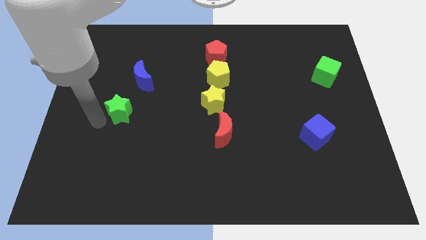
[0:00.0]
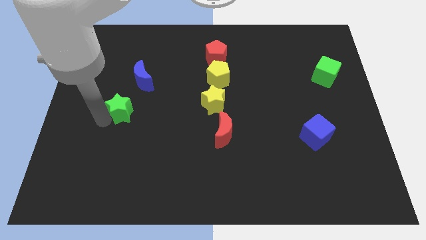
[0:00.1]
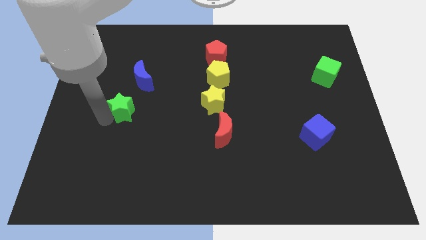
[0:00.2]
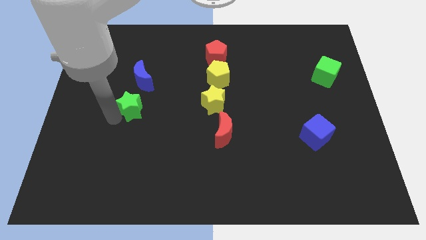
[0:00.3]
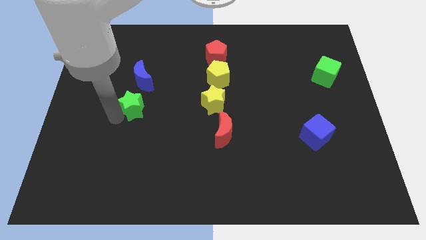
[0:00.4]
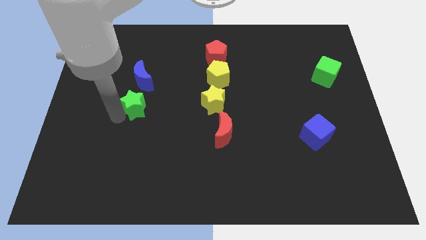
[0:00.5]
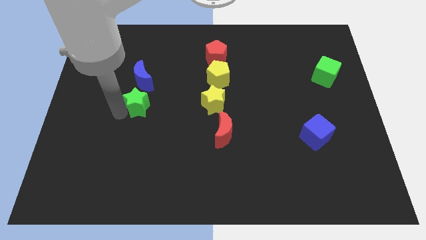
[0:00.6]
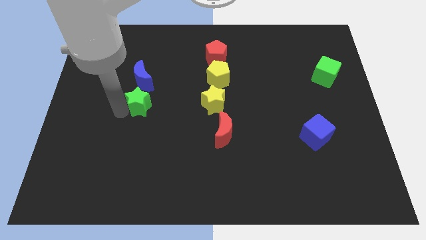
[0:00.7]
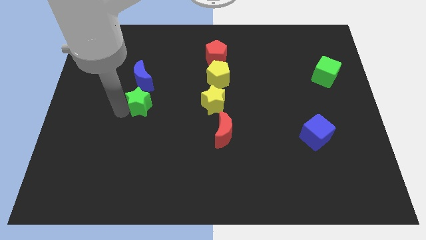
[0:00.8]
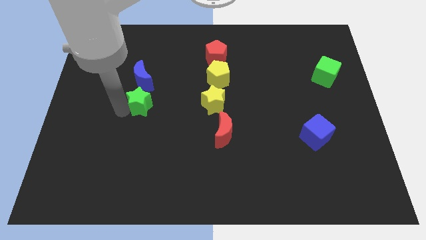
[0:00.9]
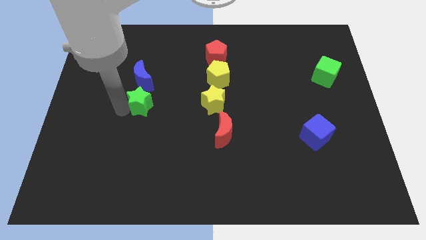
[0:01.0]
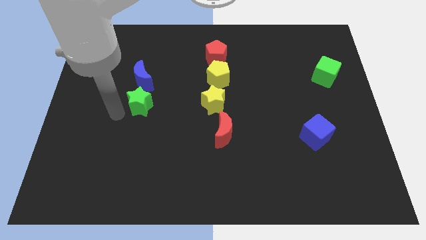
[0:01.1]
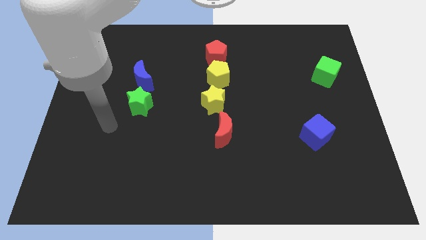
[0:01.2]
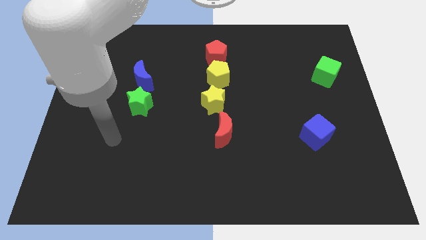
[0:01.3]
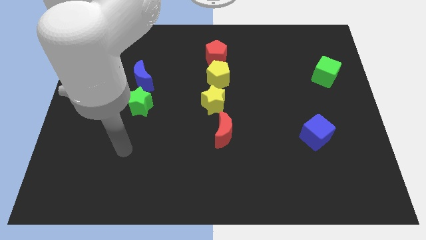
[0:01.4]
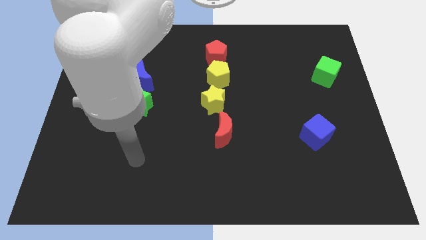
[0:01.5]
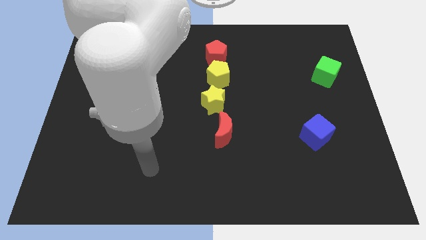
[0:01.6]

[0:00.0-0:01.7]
place green star below the blue moon

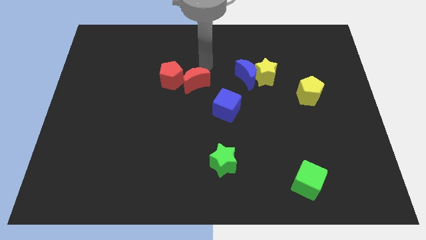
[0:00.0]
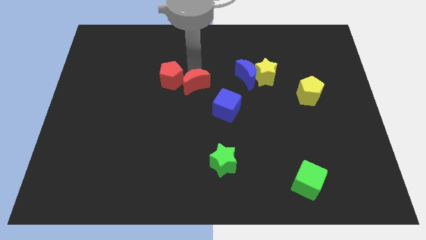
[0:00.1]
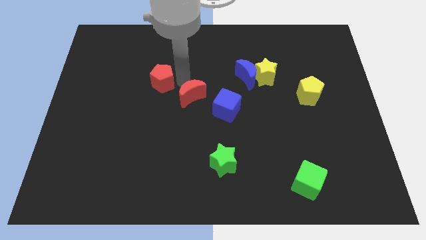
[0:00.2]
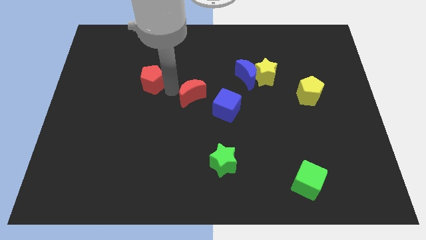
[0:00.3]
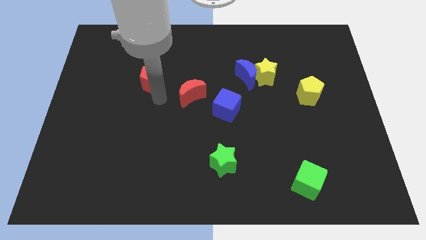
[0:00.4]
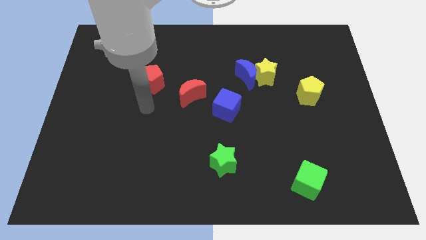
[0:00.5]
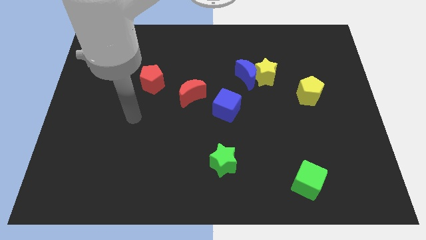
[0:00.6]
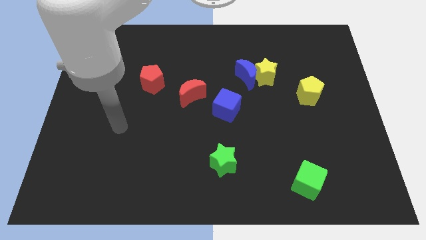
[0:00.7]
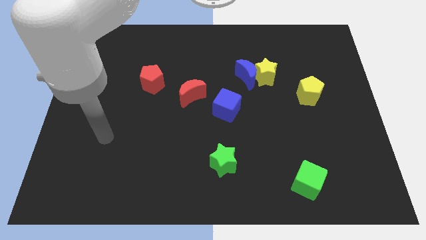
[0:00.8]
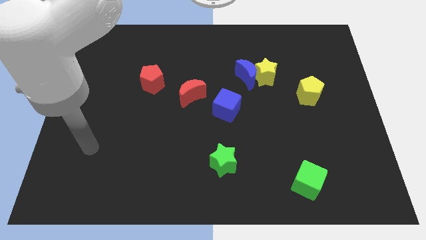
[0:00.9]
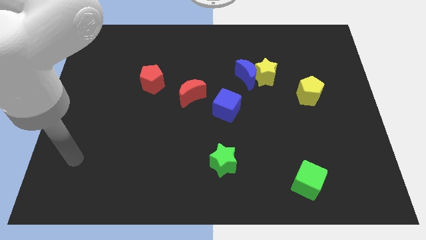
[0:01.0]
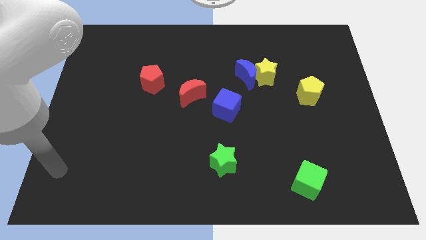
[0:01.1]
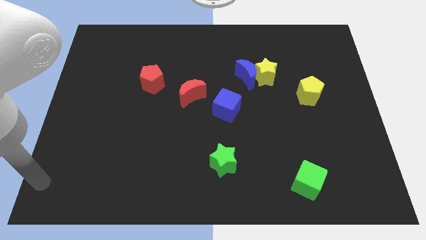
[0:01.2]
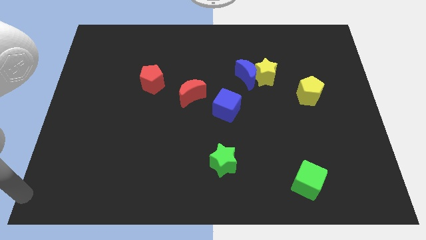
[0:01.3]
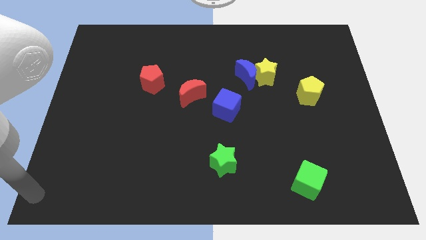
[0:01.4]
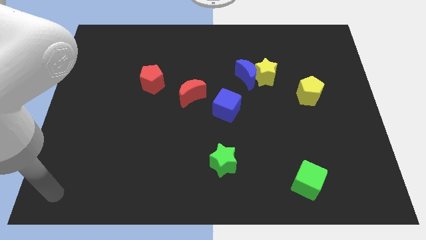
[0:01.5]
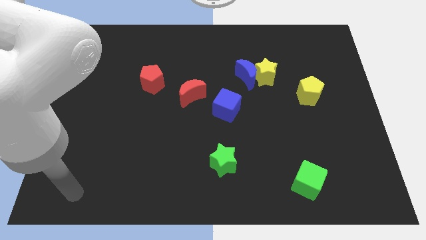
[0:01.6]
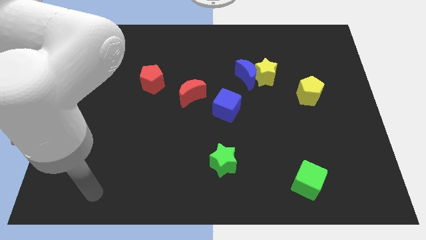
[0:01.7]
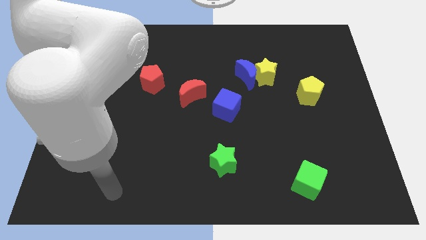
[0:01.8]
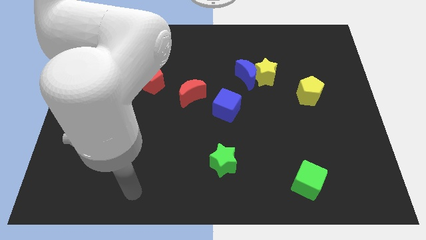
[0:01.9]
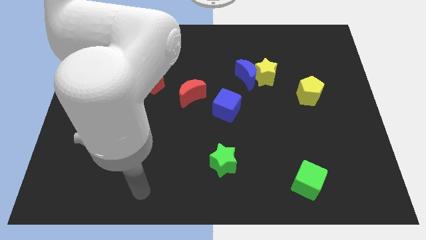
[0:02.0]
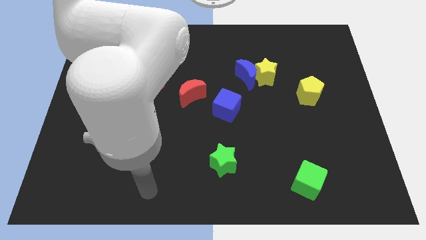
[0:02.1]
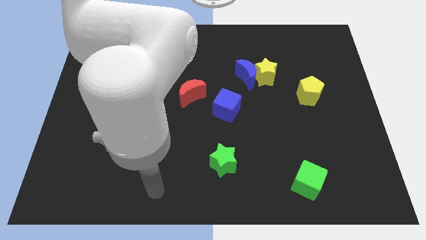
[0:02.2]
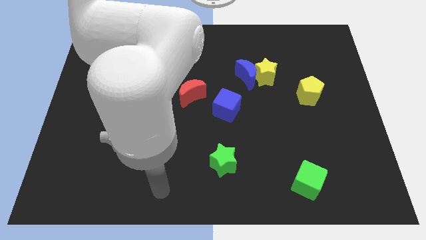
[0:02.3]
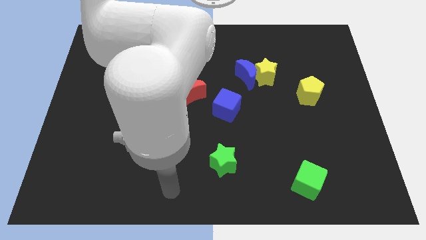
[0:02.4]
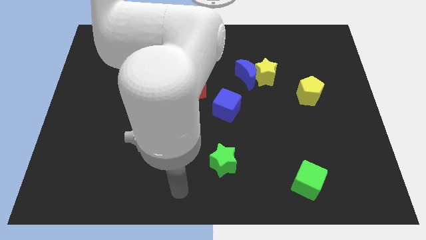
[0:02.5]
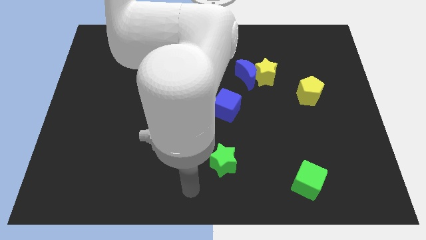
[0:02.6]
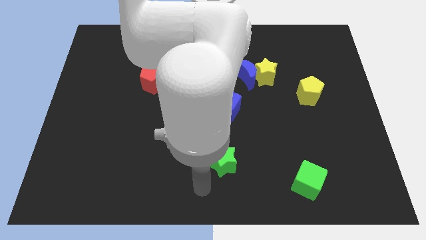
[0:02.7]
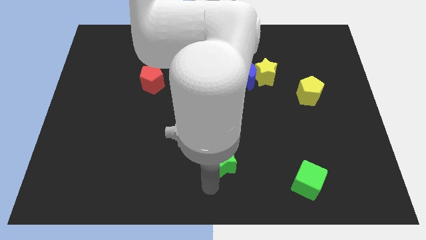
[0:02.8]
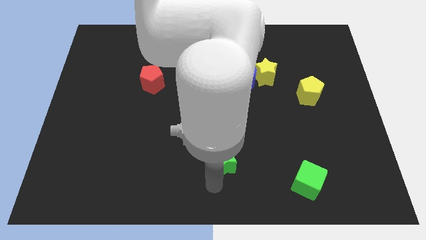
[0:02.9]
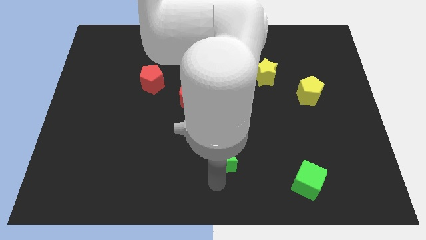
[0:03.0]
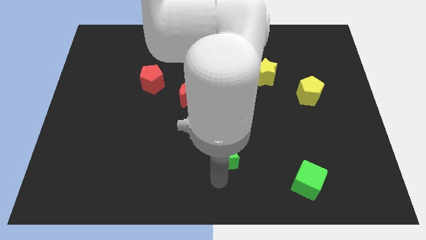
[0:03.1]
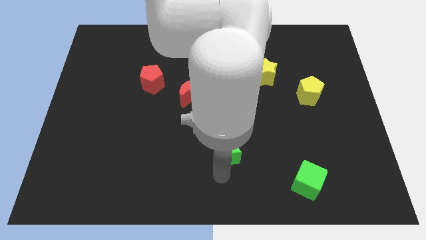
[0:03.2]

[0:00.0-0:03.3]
separate the red moon and the red pentagon

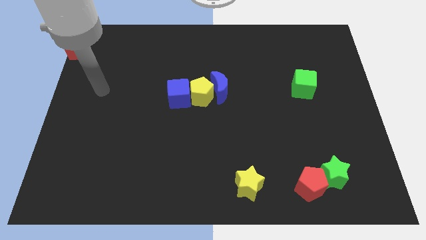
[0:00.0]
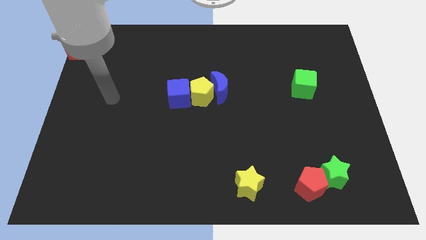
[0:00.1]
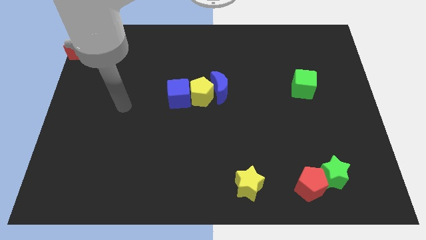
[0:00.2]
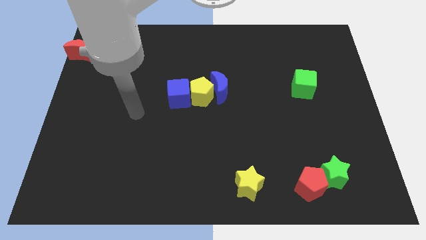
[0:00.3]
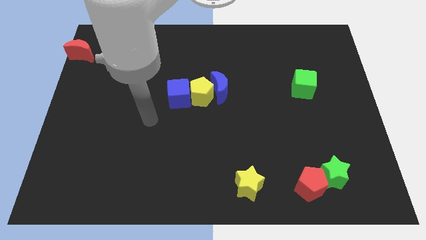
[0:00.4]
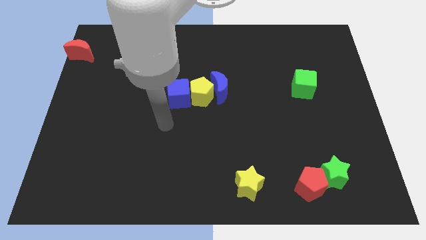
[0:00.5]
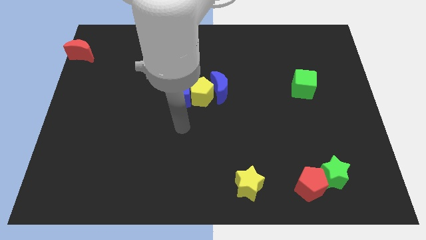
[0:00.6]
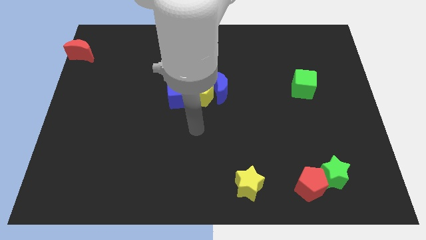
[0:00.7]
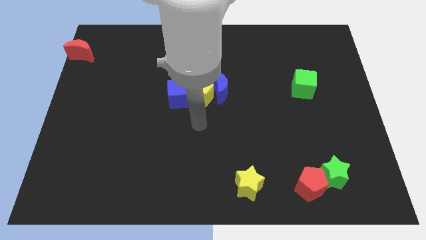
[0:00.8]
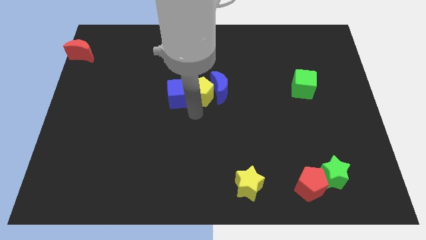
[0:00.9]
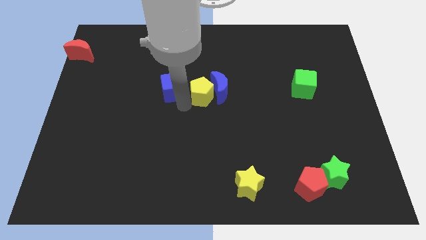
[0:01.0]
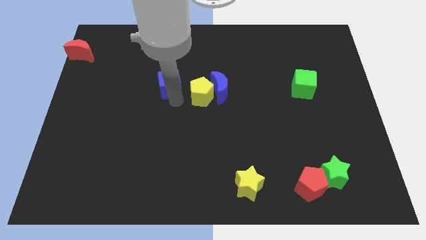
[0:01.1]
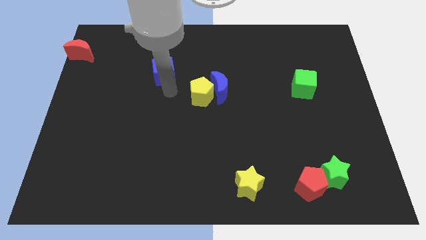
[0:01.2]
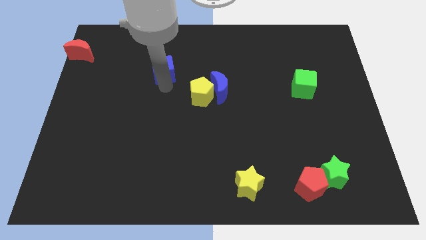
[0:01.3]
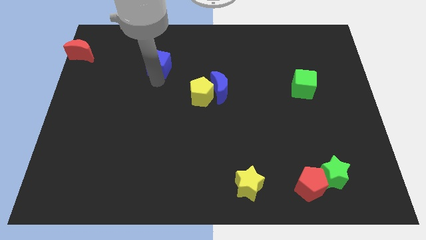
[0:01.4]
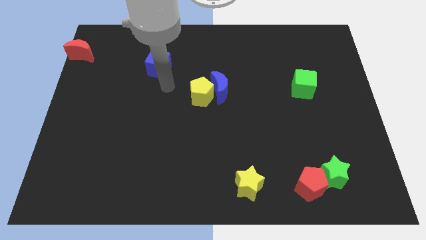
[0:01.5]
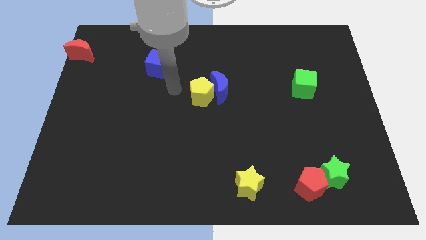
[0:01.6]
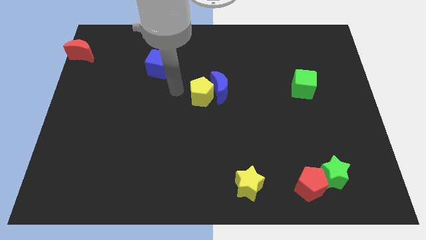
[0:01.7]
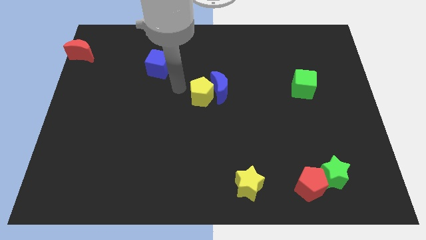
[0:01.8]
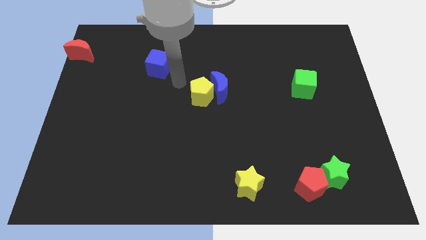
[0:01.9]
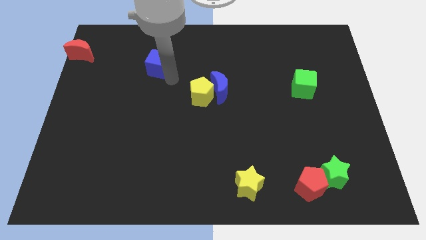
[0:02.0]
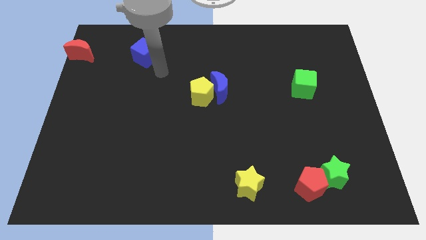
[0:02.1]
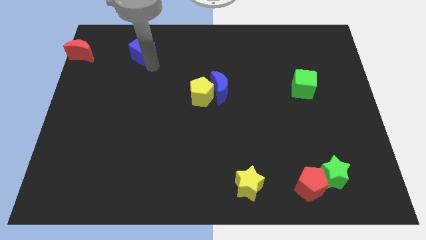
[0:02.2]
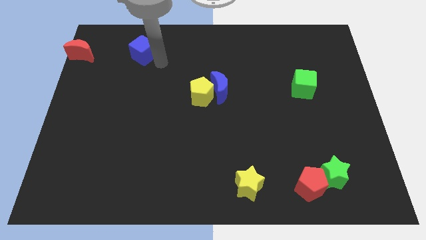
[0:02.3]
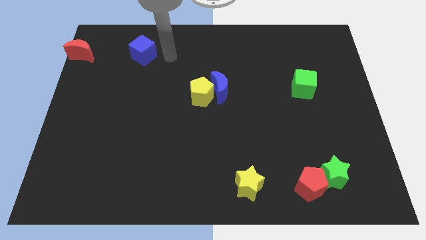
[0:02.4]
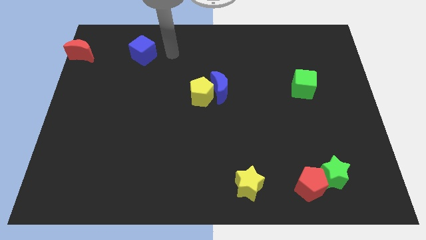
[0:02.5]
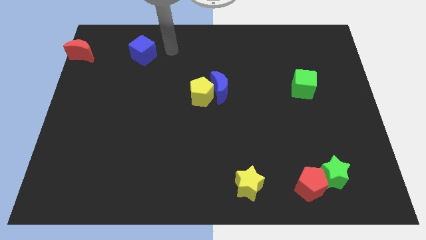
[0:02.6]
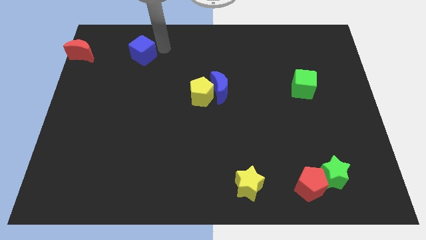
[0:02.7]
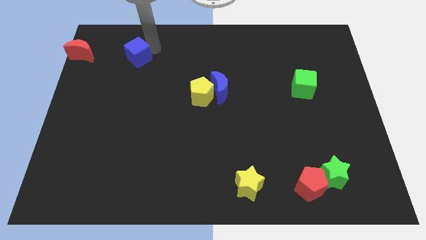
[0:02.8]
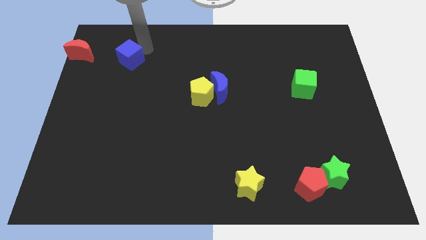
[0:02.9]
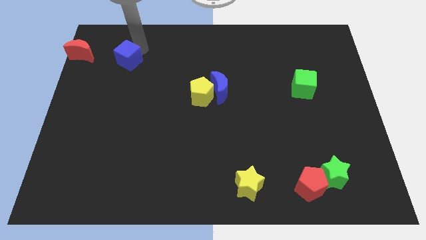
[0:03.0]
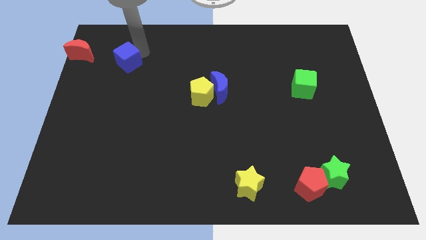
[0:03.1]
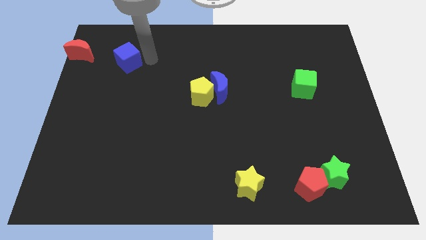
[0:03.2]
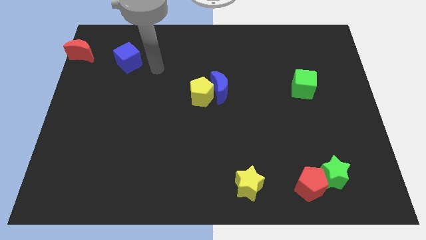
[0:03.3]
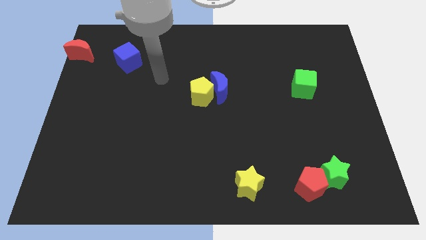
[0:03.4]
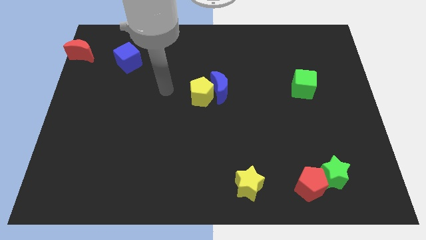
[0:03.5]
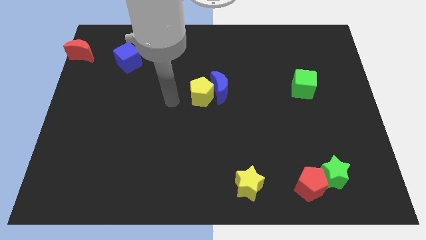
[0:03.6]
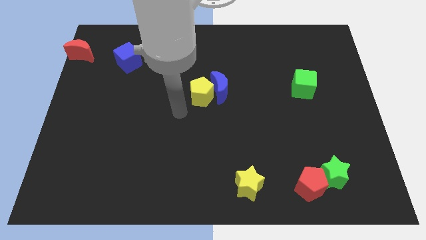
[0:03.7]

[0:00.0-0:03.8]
put the blue cube to the right side of the red moon

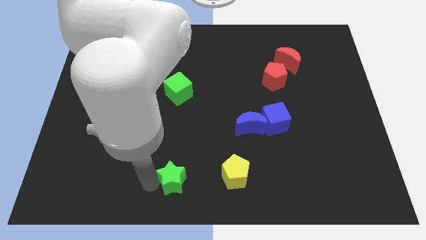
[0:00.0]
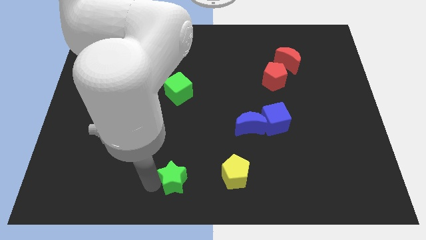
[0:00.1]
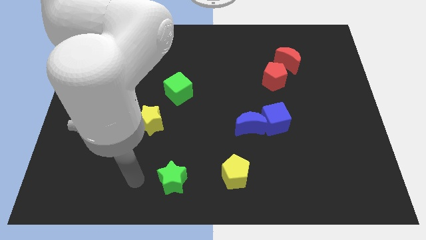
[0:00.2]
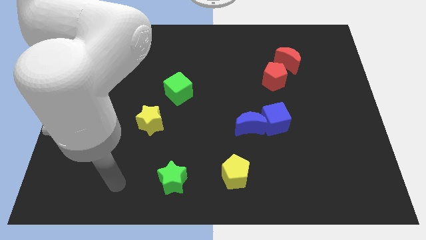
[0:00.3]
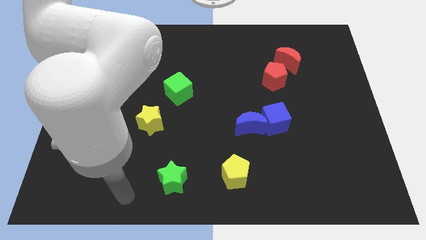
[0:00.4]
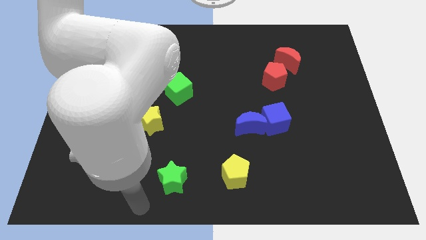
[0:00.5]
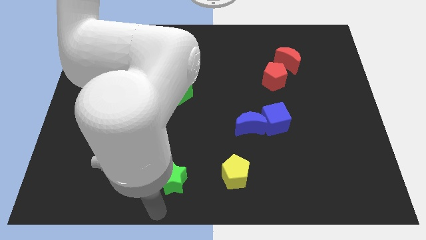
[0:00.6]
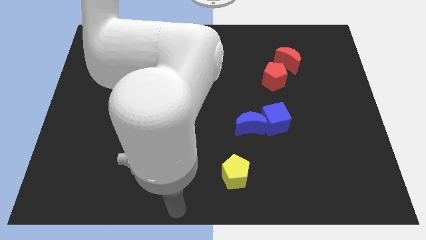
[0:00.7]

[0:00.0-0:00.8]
place your arm below green star
